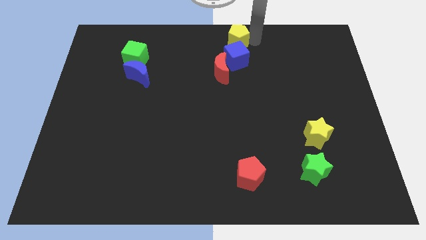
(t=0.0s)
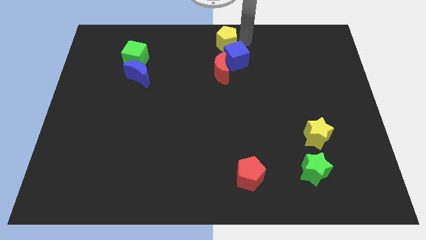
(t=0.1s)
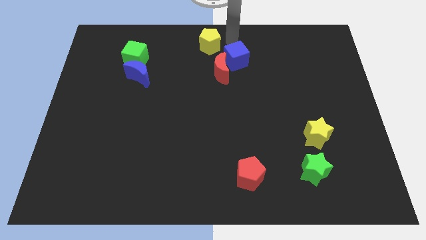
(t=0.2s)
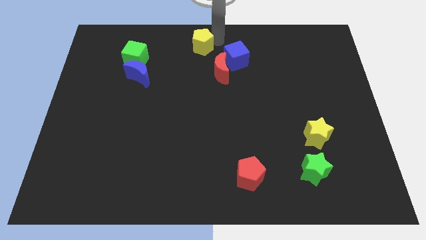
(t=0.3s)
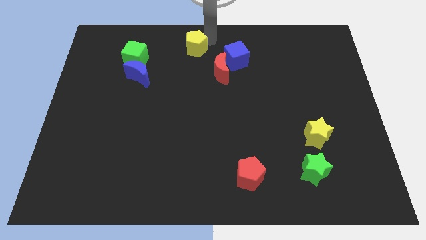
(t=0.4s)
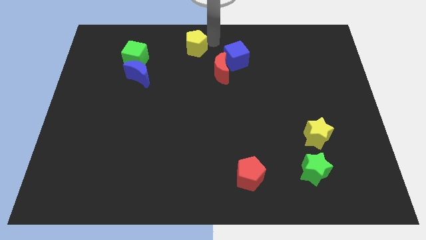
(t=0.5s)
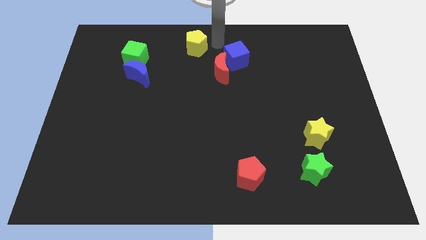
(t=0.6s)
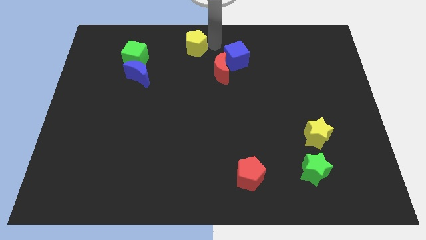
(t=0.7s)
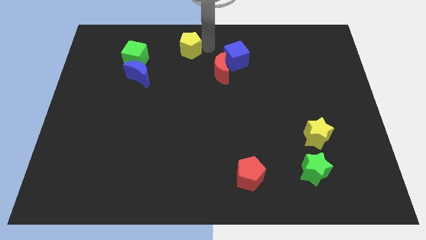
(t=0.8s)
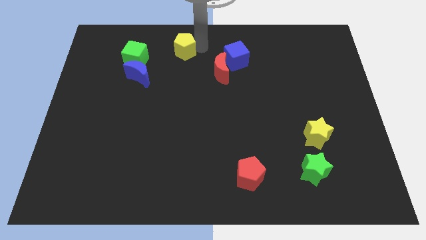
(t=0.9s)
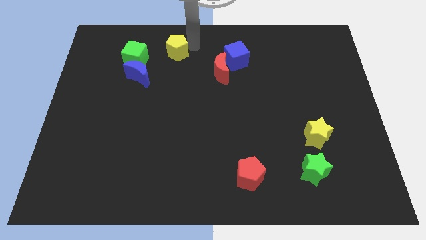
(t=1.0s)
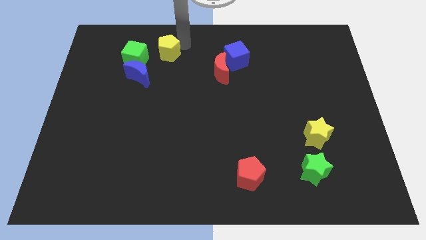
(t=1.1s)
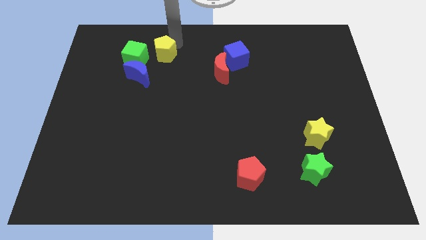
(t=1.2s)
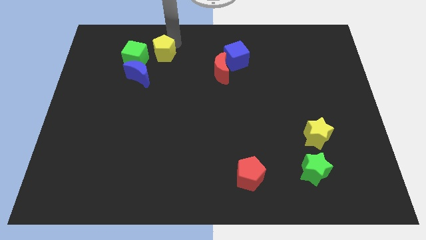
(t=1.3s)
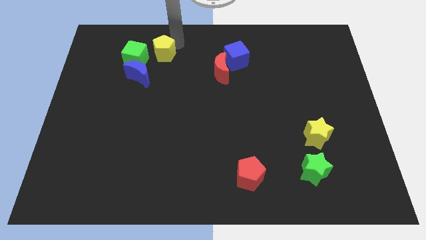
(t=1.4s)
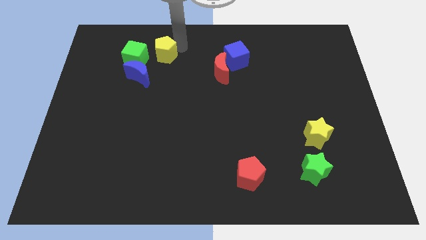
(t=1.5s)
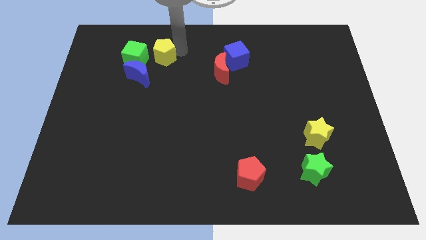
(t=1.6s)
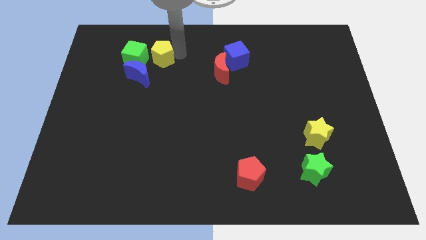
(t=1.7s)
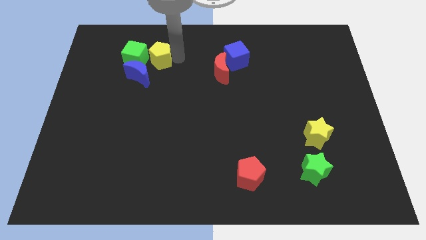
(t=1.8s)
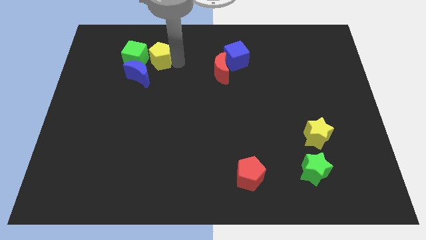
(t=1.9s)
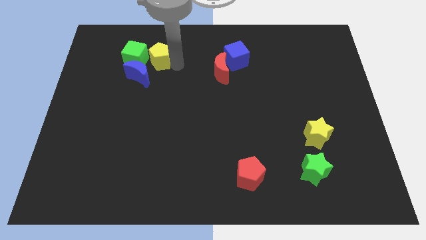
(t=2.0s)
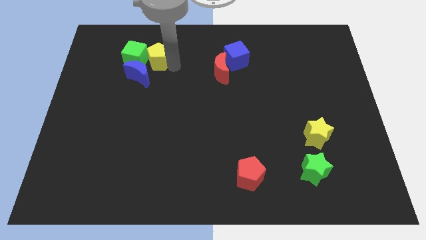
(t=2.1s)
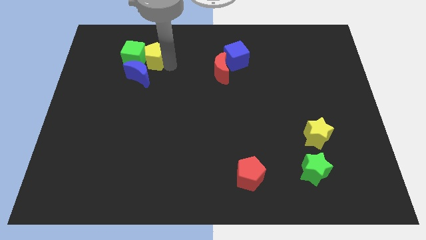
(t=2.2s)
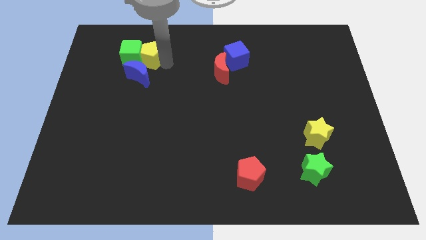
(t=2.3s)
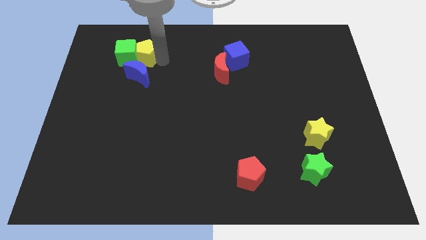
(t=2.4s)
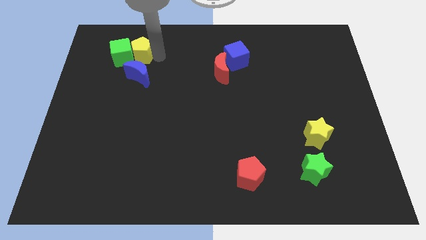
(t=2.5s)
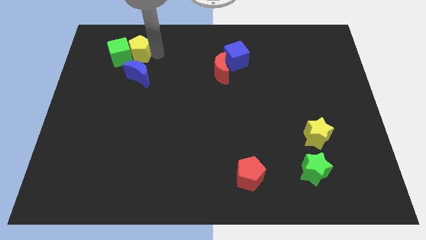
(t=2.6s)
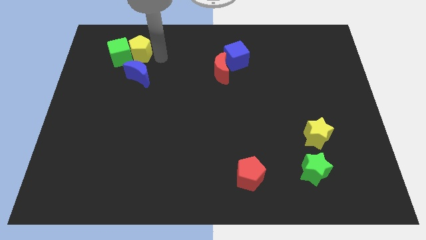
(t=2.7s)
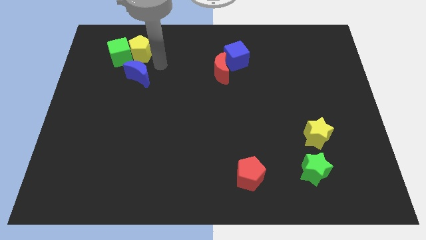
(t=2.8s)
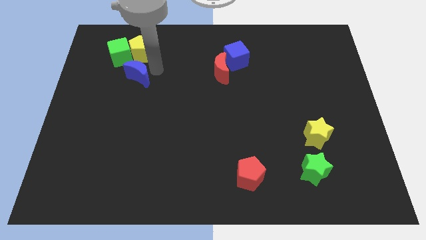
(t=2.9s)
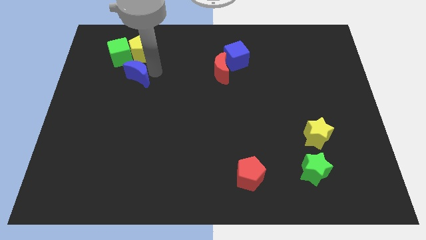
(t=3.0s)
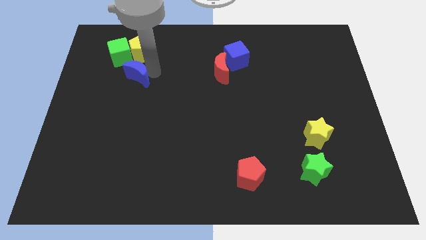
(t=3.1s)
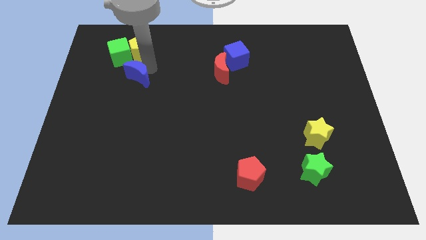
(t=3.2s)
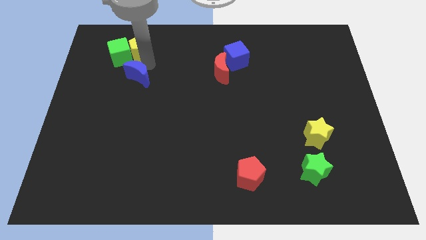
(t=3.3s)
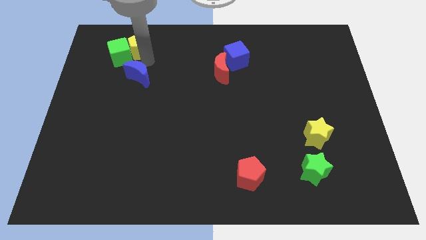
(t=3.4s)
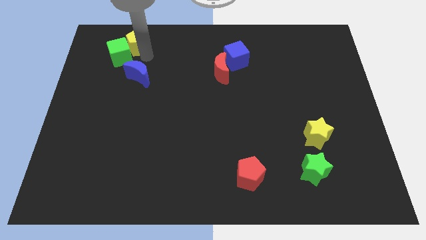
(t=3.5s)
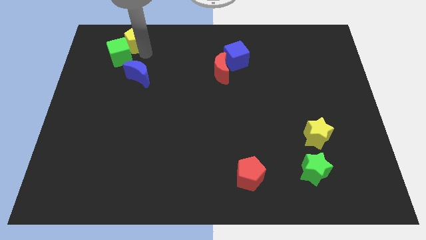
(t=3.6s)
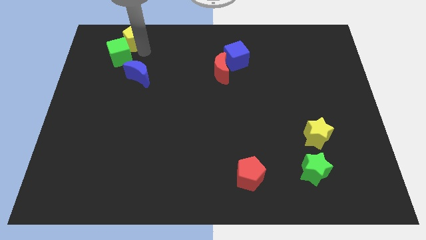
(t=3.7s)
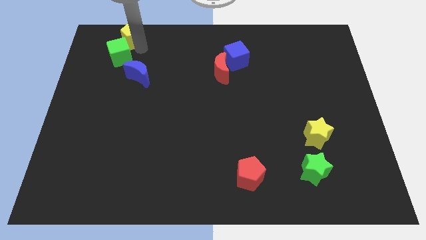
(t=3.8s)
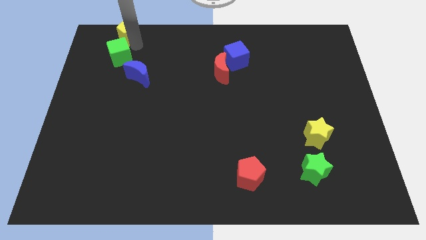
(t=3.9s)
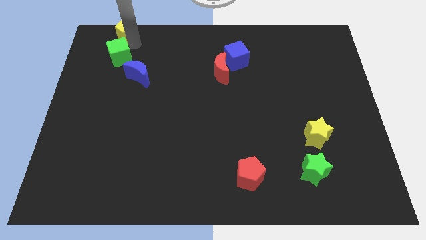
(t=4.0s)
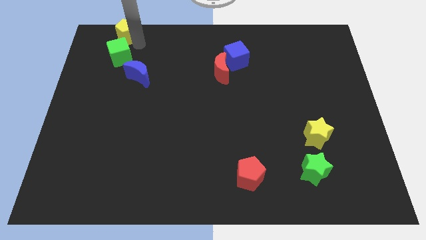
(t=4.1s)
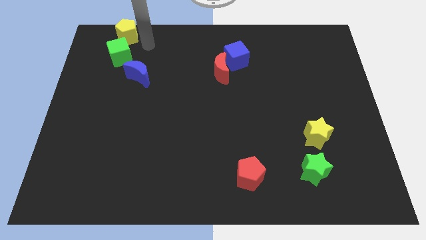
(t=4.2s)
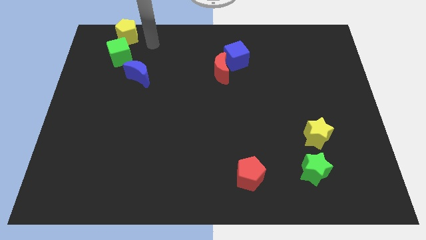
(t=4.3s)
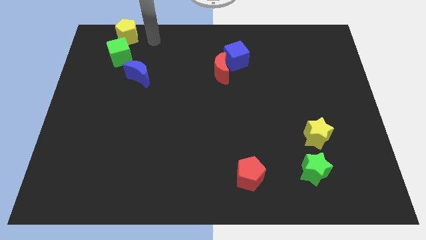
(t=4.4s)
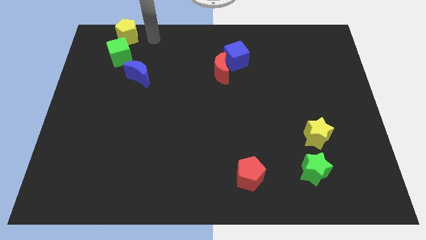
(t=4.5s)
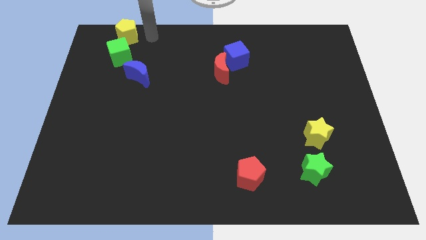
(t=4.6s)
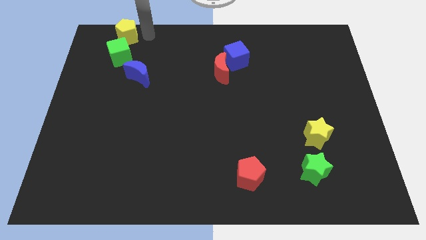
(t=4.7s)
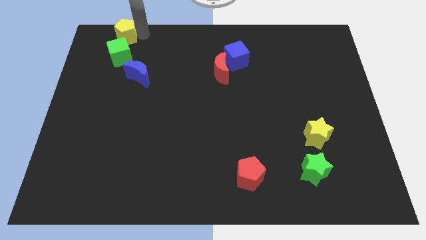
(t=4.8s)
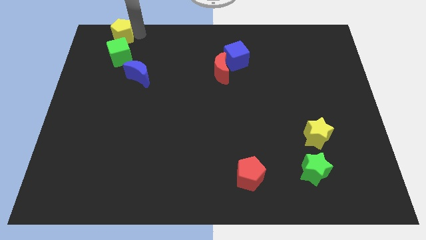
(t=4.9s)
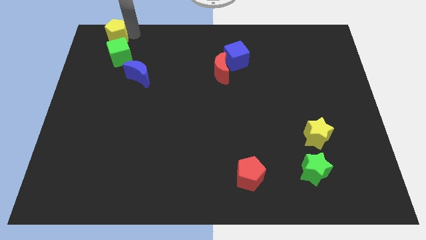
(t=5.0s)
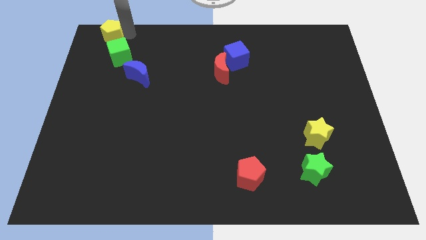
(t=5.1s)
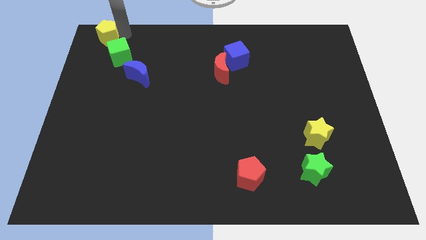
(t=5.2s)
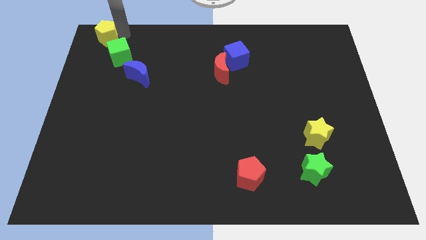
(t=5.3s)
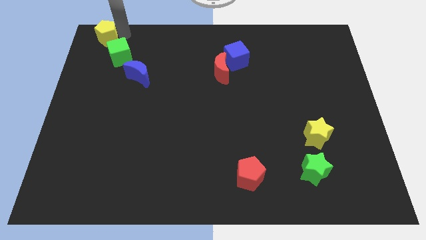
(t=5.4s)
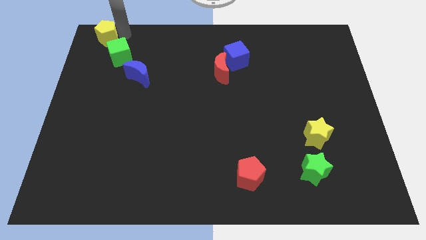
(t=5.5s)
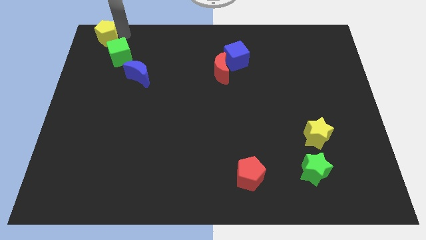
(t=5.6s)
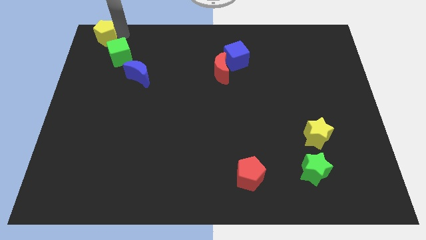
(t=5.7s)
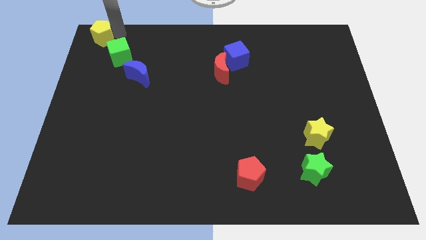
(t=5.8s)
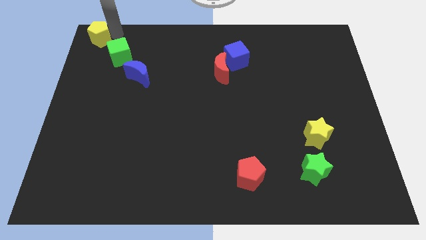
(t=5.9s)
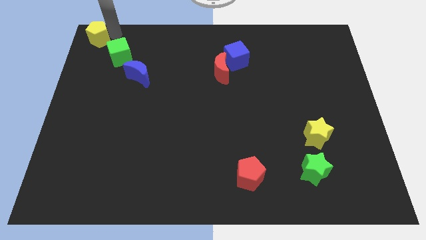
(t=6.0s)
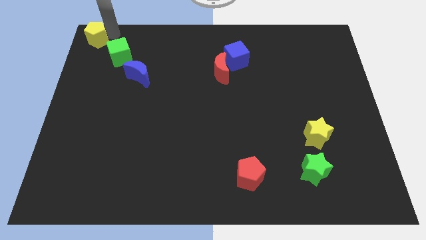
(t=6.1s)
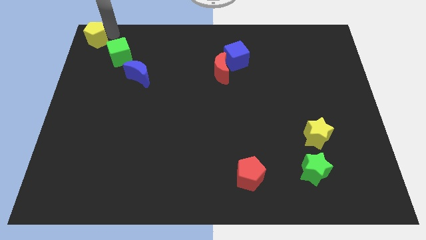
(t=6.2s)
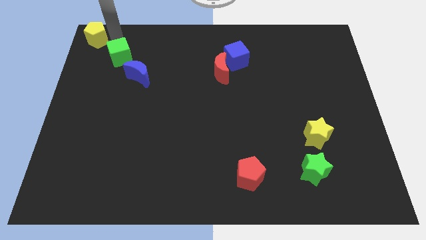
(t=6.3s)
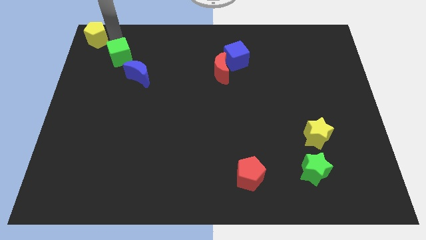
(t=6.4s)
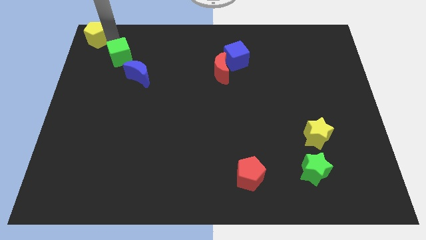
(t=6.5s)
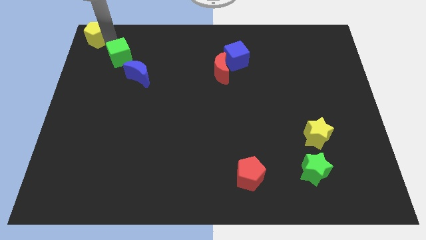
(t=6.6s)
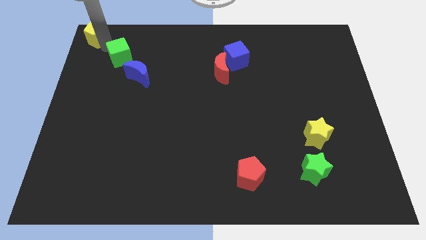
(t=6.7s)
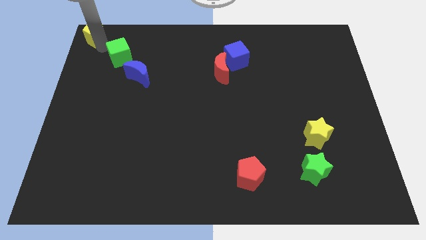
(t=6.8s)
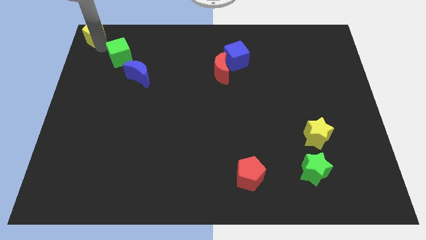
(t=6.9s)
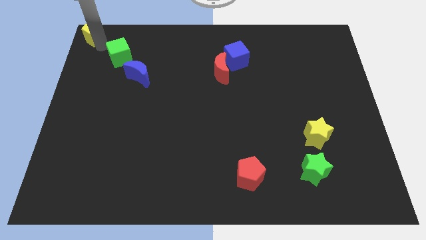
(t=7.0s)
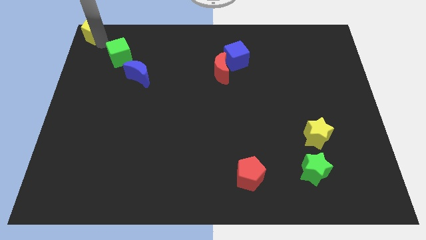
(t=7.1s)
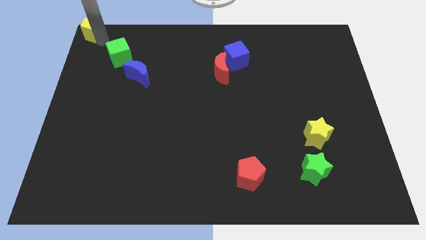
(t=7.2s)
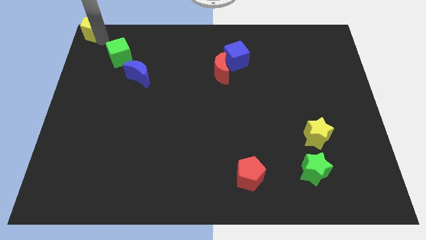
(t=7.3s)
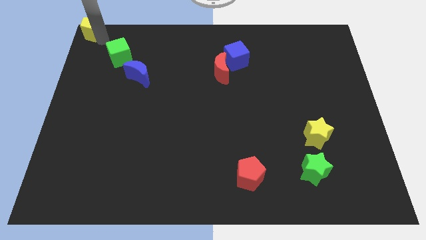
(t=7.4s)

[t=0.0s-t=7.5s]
slide the yellow pentagon to the top left side of the table

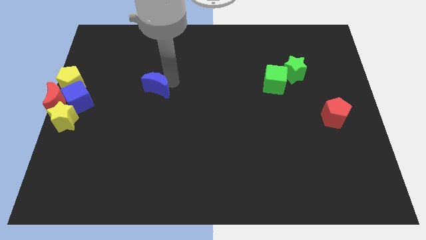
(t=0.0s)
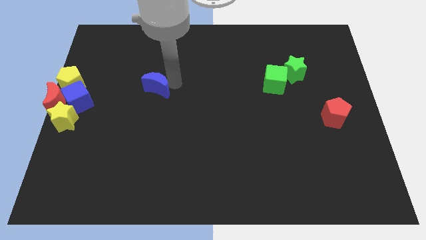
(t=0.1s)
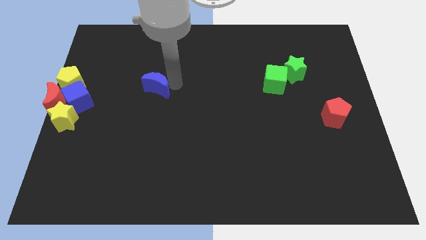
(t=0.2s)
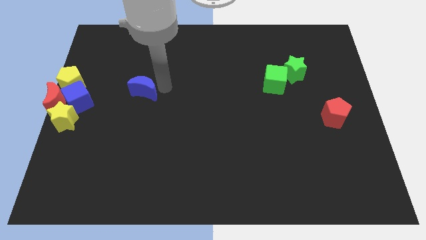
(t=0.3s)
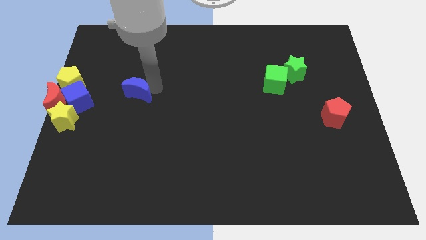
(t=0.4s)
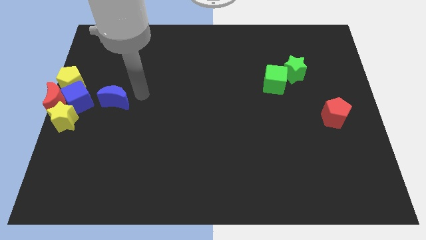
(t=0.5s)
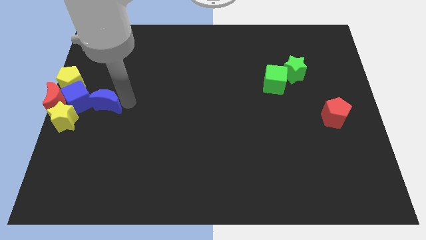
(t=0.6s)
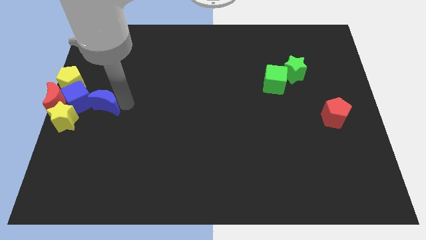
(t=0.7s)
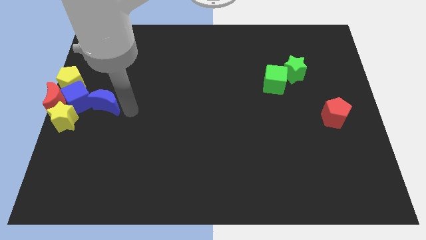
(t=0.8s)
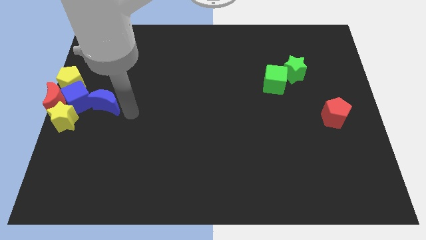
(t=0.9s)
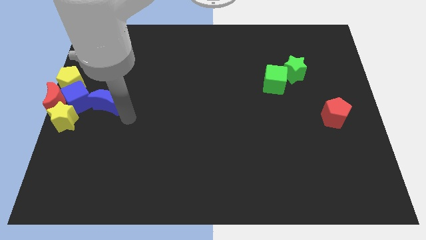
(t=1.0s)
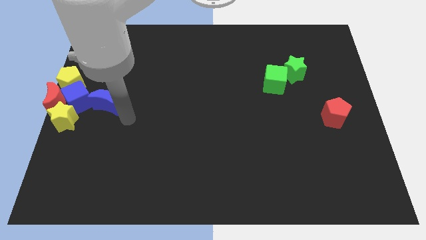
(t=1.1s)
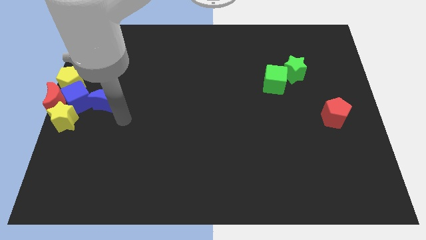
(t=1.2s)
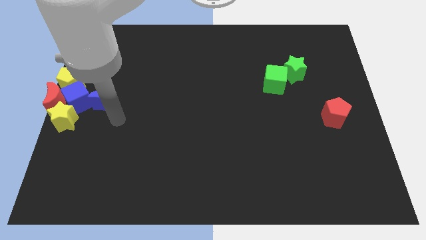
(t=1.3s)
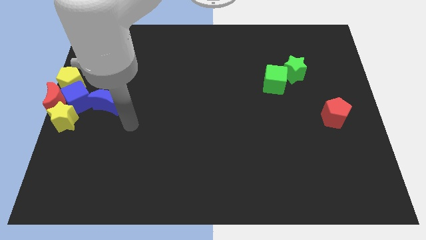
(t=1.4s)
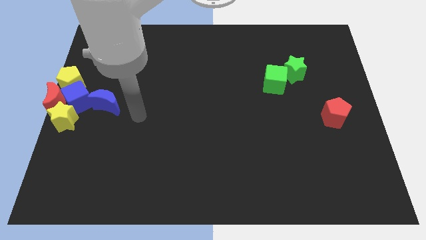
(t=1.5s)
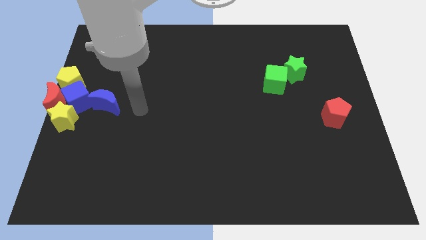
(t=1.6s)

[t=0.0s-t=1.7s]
push blue crescent into the blue cube
